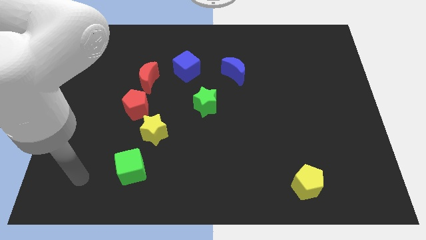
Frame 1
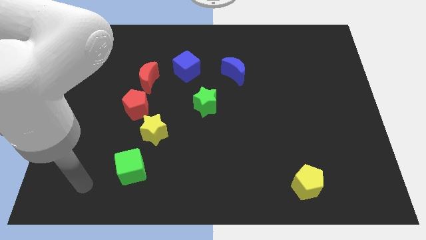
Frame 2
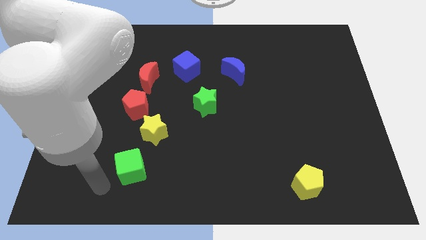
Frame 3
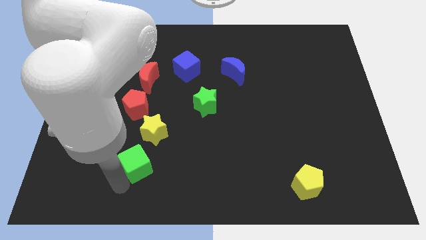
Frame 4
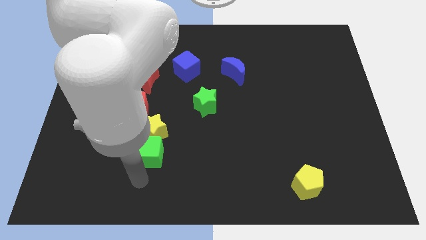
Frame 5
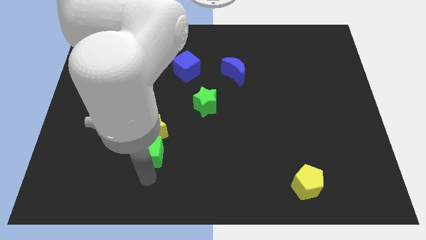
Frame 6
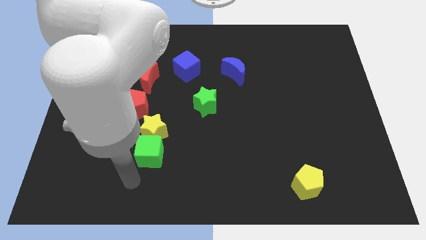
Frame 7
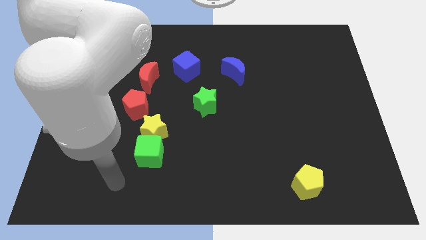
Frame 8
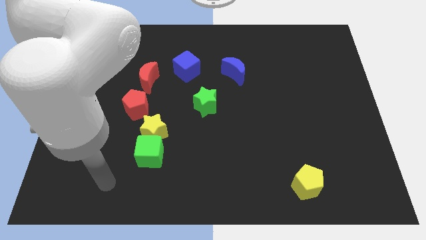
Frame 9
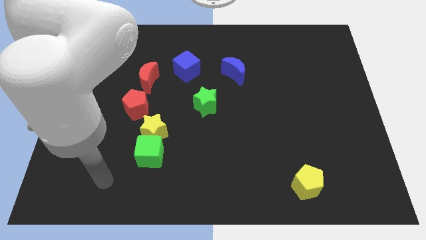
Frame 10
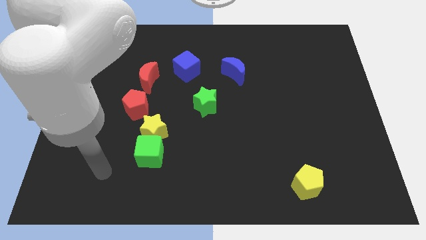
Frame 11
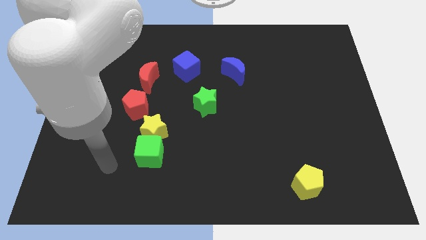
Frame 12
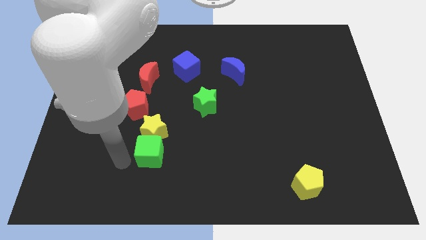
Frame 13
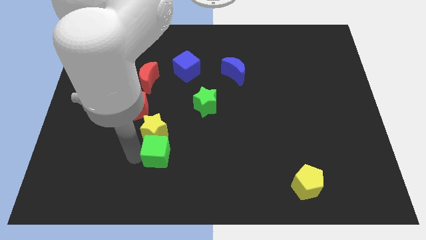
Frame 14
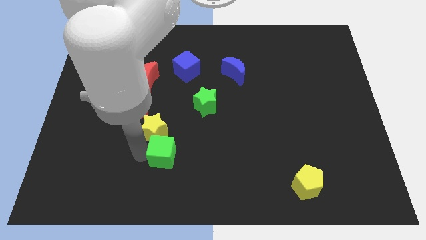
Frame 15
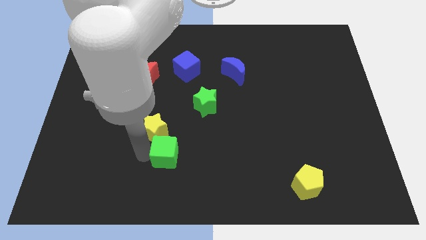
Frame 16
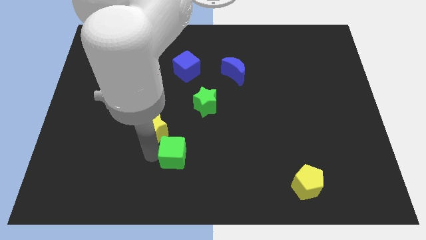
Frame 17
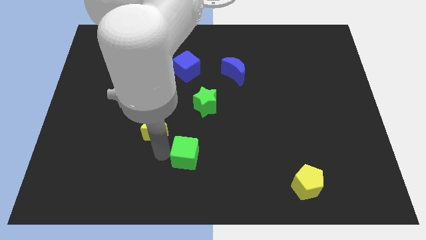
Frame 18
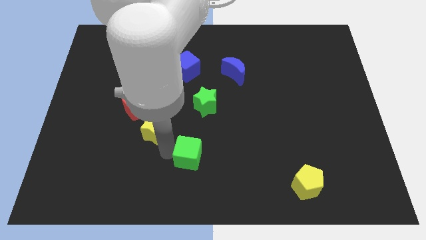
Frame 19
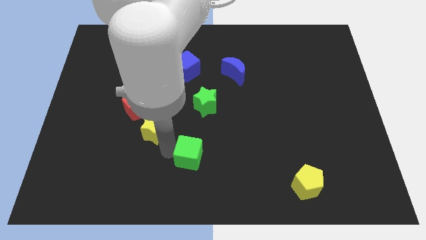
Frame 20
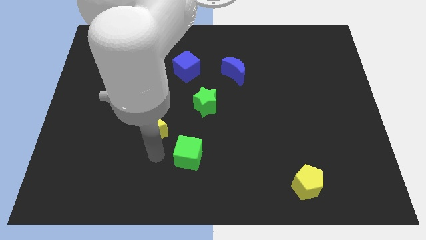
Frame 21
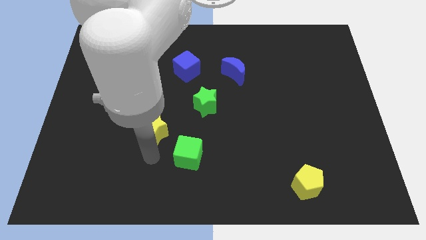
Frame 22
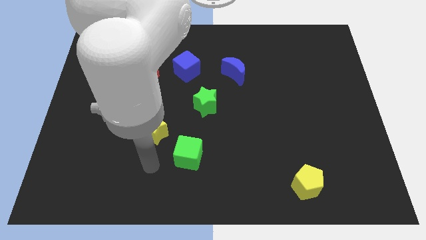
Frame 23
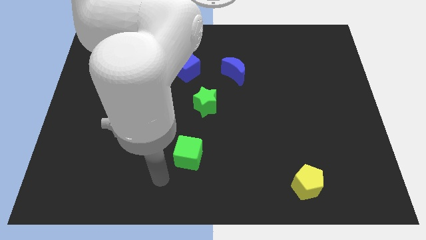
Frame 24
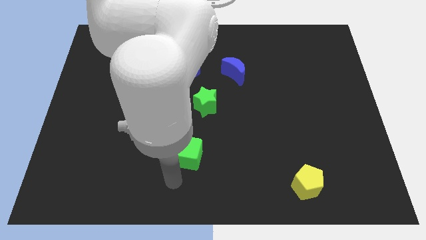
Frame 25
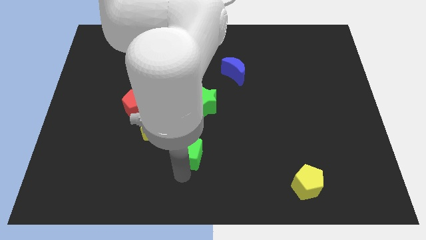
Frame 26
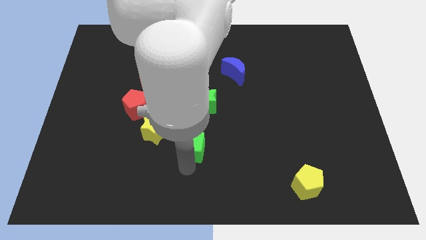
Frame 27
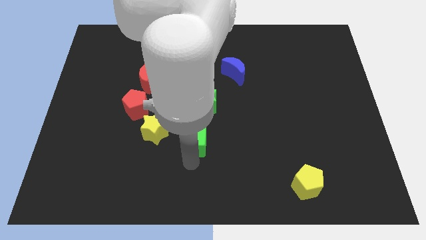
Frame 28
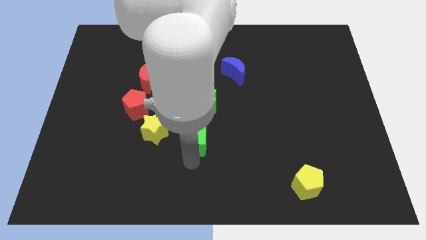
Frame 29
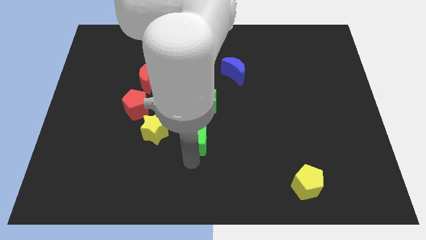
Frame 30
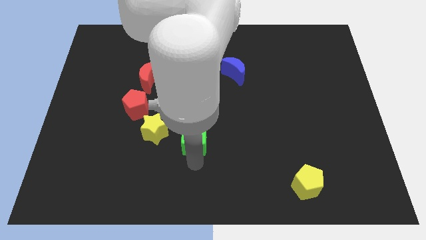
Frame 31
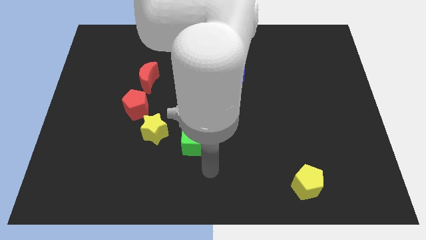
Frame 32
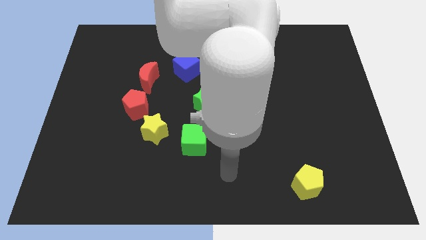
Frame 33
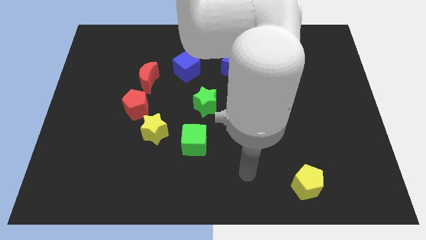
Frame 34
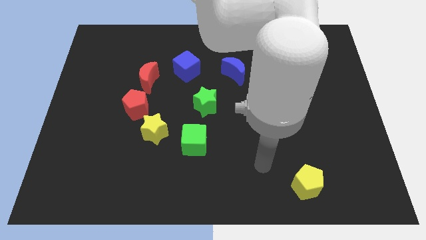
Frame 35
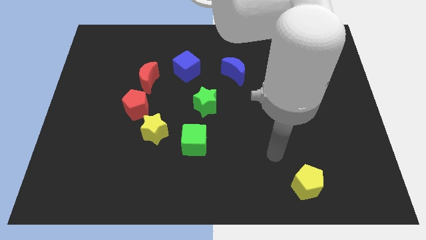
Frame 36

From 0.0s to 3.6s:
place the green cube below the green star

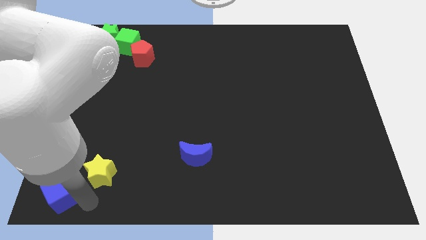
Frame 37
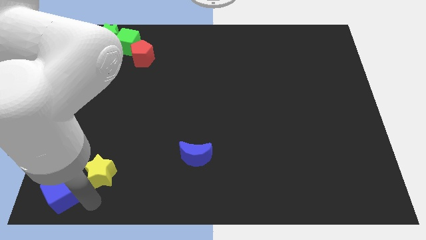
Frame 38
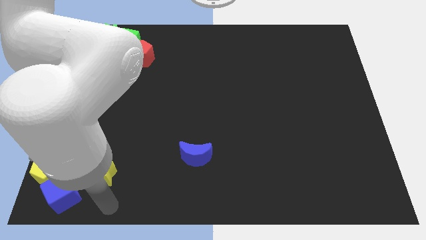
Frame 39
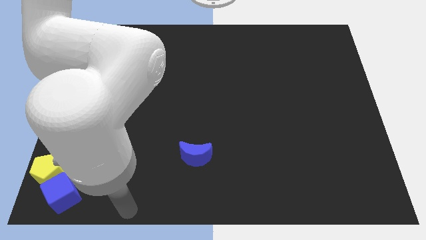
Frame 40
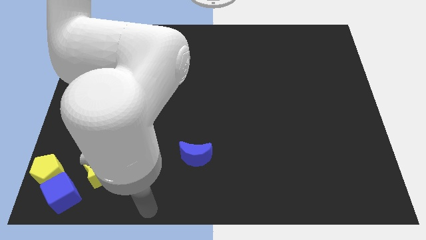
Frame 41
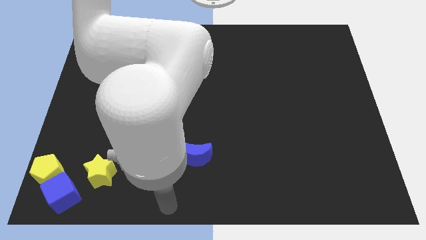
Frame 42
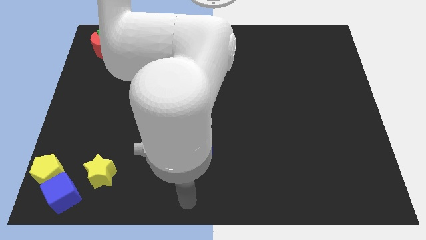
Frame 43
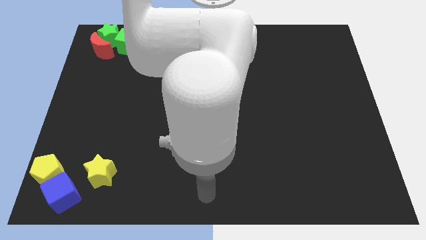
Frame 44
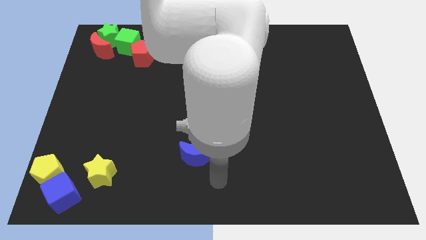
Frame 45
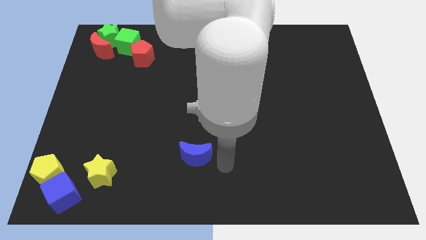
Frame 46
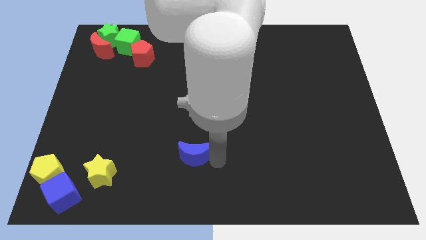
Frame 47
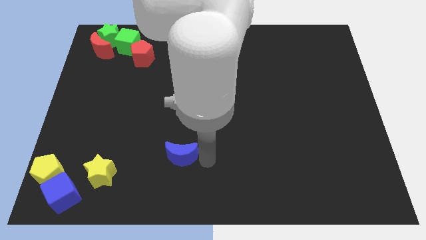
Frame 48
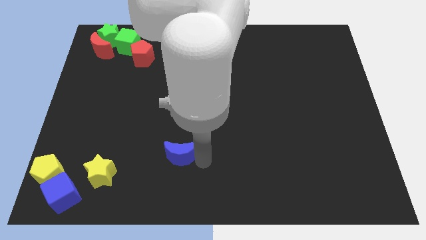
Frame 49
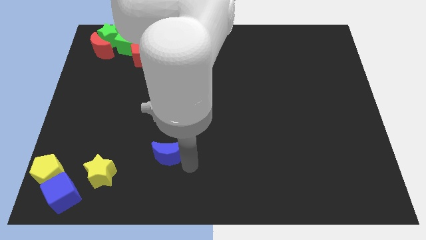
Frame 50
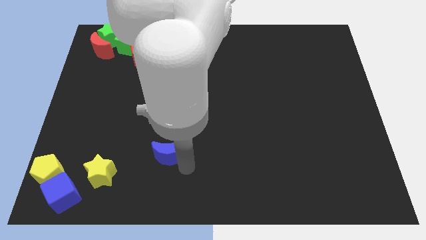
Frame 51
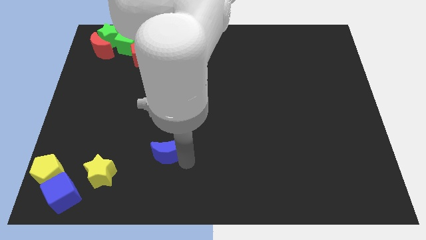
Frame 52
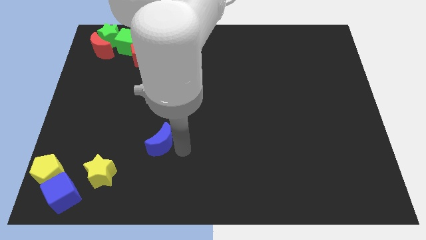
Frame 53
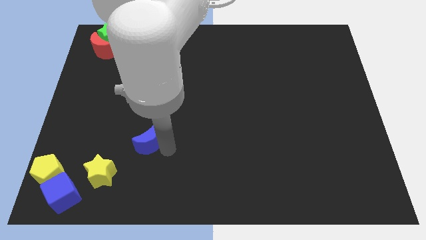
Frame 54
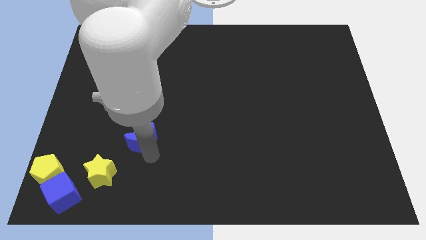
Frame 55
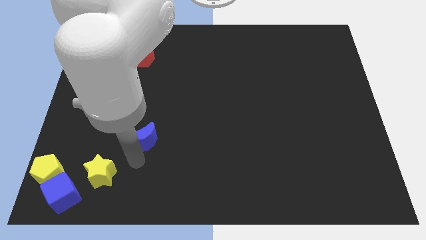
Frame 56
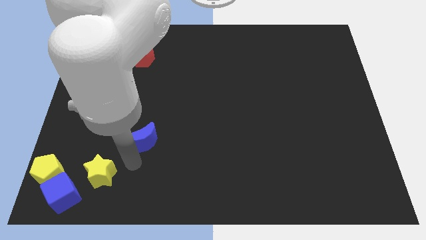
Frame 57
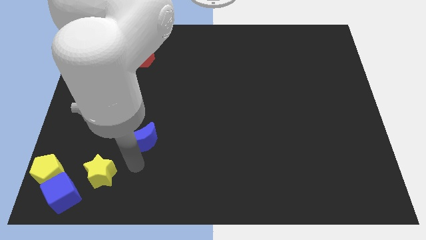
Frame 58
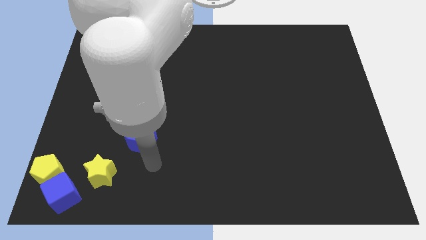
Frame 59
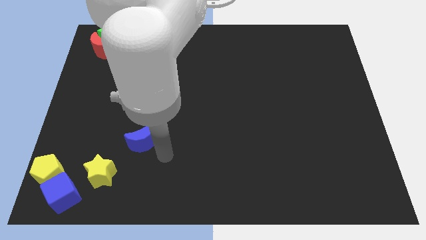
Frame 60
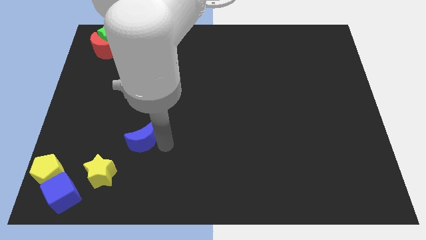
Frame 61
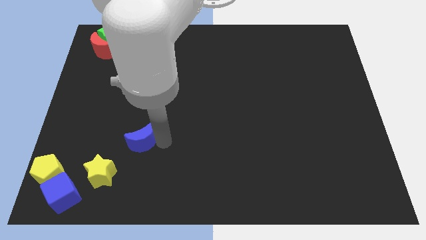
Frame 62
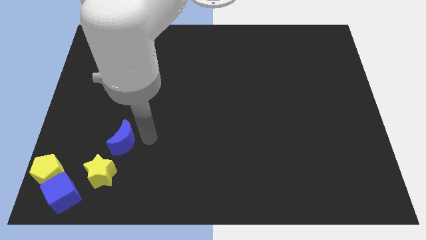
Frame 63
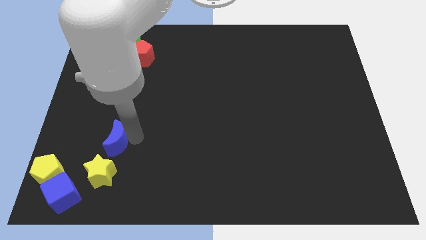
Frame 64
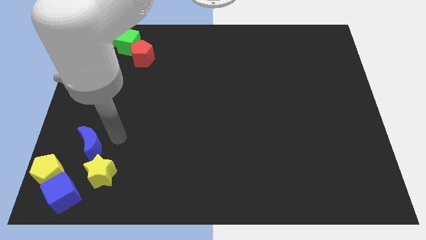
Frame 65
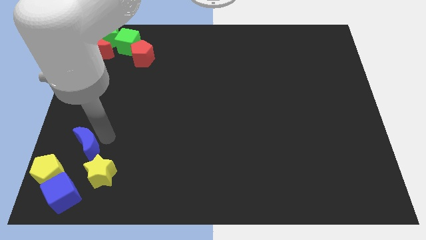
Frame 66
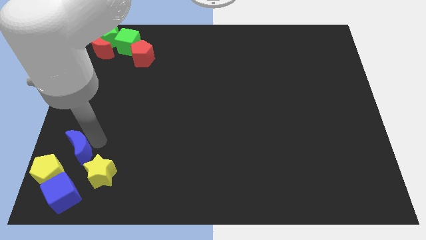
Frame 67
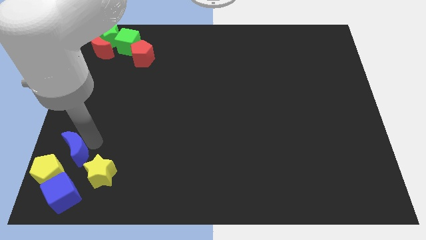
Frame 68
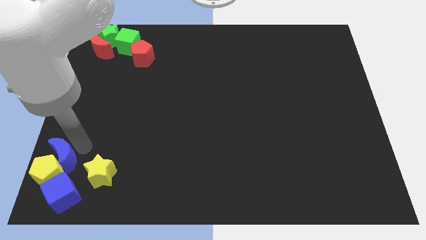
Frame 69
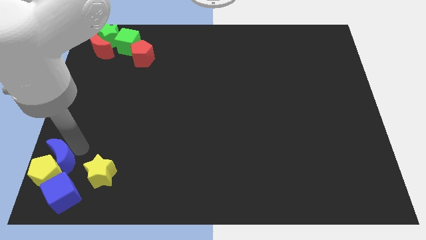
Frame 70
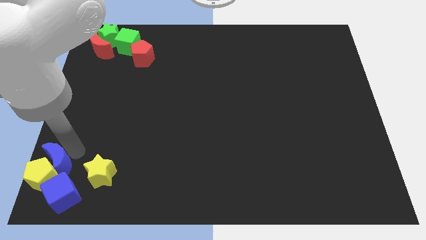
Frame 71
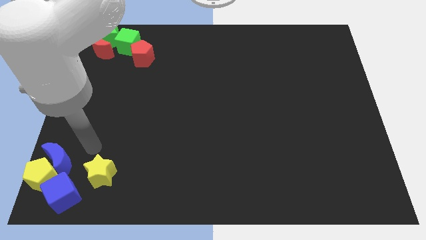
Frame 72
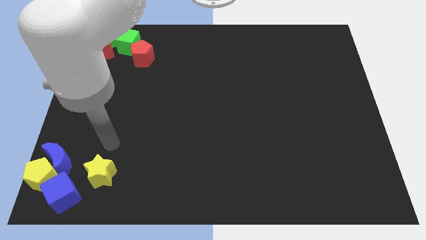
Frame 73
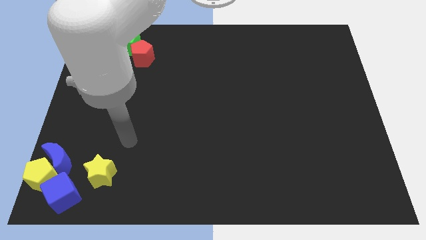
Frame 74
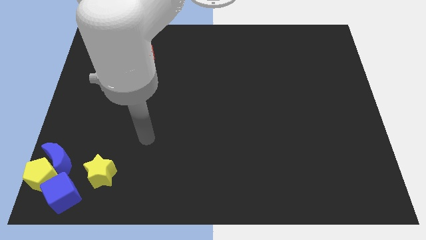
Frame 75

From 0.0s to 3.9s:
push the blue moon into the yellow pentagon

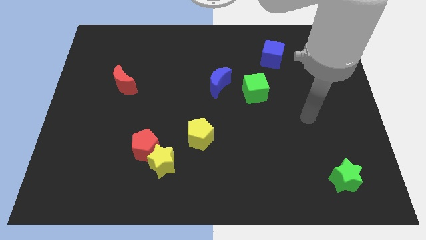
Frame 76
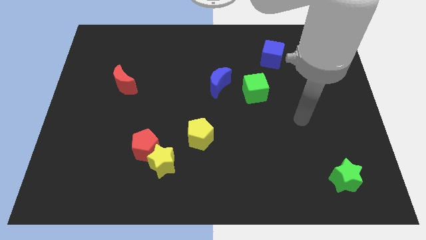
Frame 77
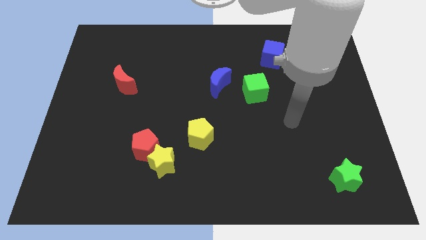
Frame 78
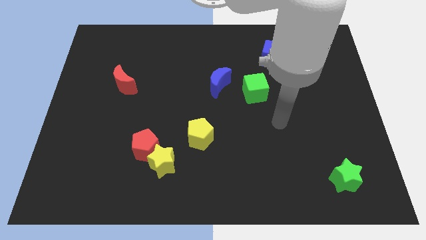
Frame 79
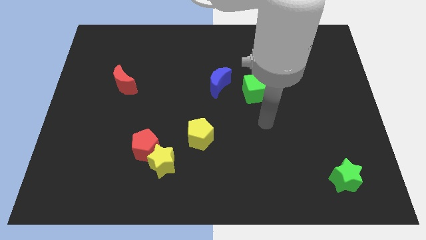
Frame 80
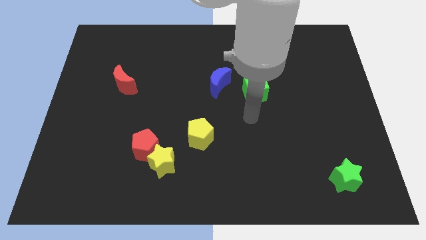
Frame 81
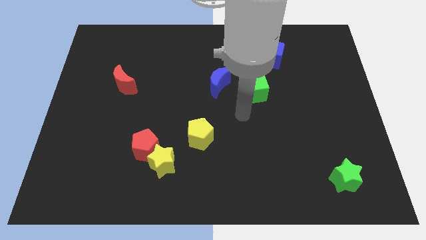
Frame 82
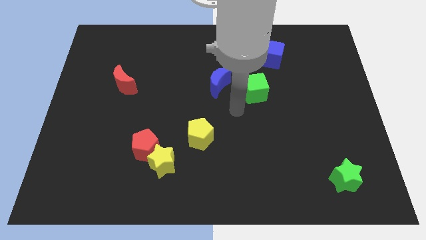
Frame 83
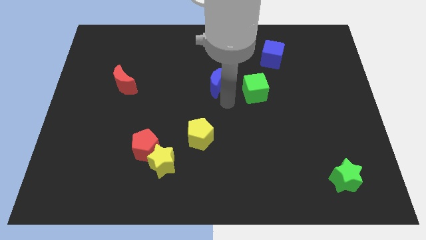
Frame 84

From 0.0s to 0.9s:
place the arm below the blue moon

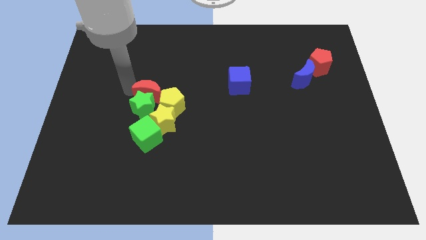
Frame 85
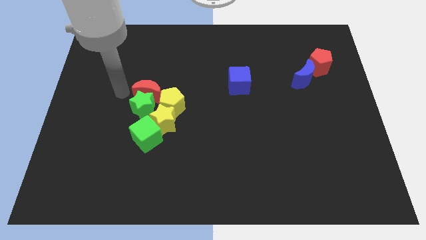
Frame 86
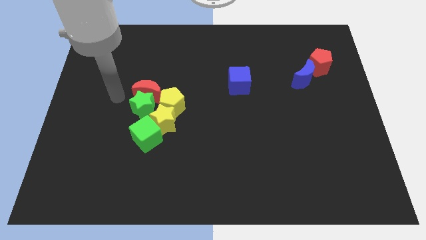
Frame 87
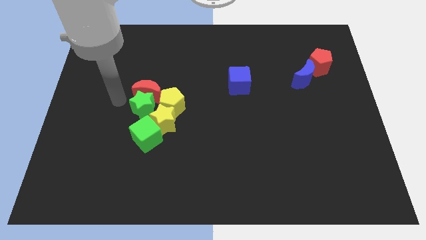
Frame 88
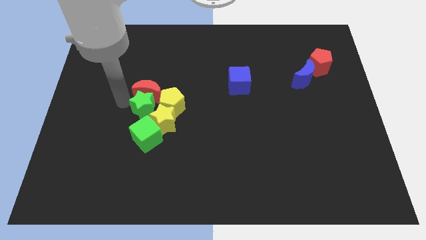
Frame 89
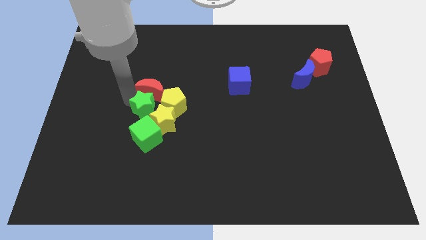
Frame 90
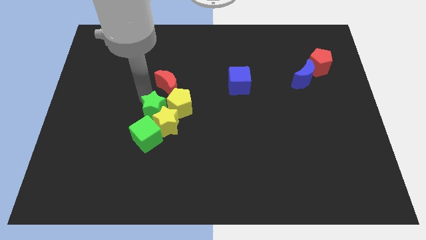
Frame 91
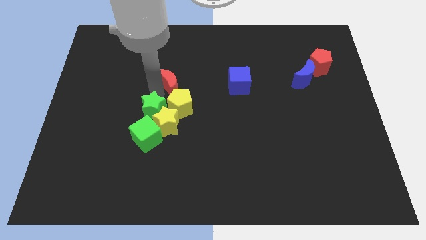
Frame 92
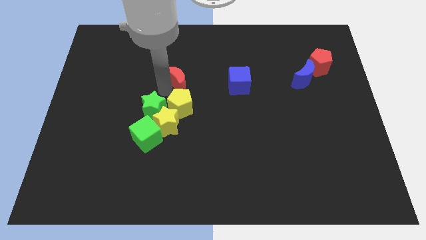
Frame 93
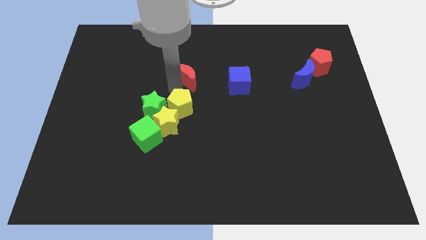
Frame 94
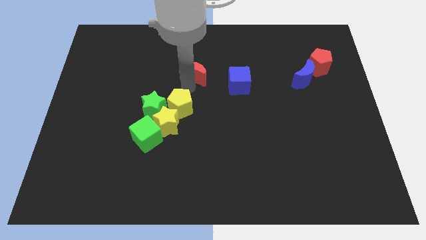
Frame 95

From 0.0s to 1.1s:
separate red crescent from the green star
